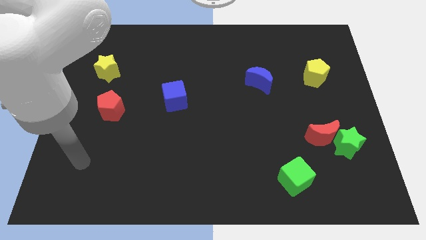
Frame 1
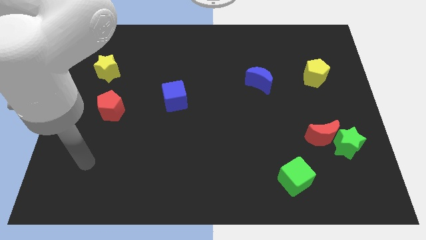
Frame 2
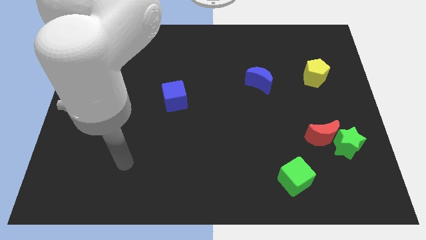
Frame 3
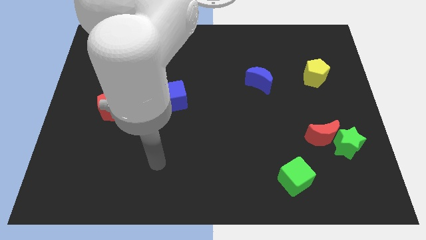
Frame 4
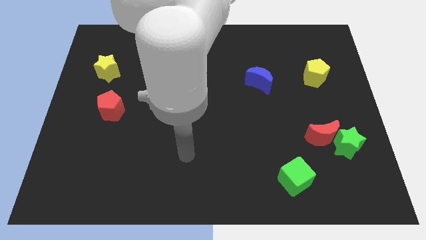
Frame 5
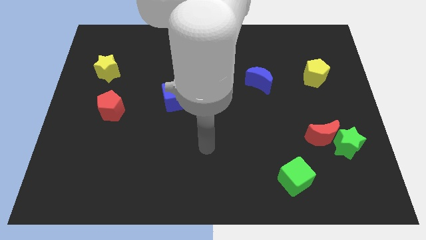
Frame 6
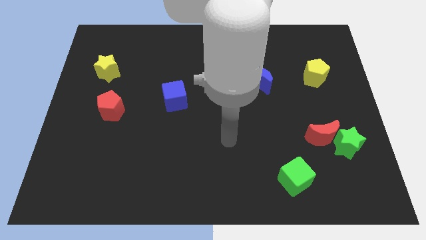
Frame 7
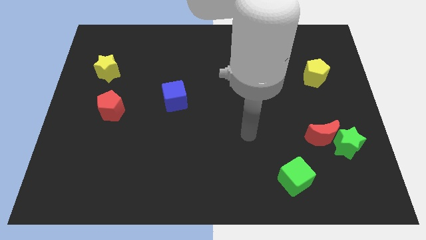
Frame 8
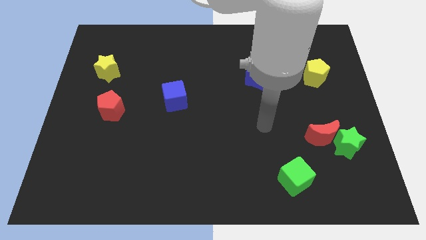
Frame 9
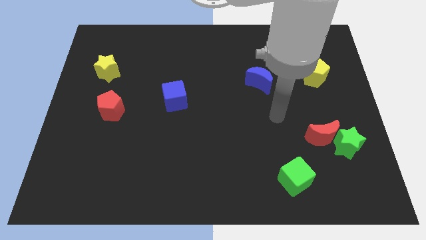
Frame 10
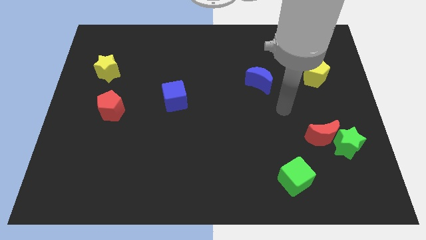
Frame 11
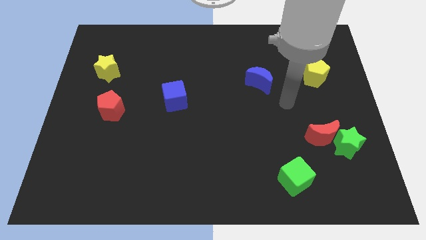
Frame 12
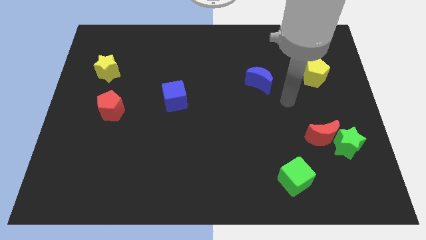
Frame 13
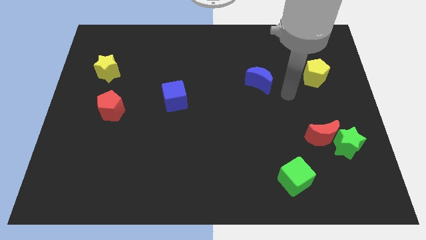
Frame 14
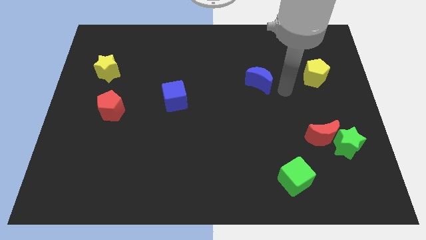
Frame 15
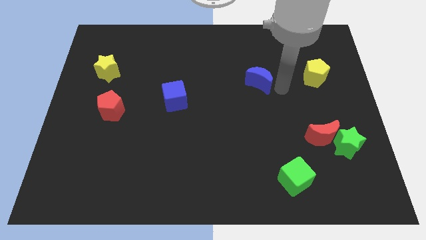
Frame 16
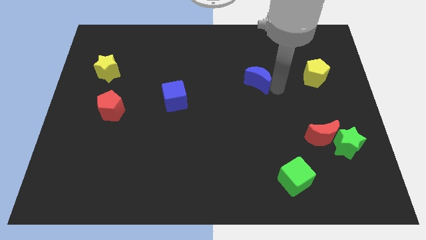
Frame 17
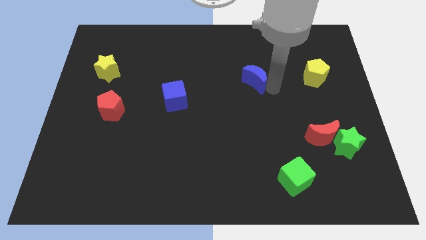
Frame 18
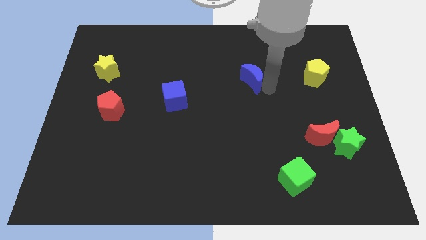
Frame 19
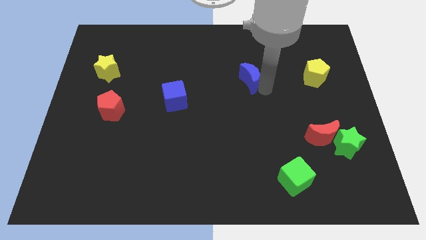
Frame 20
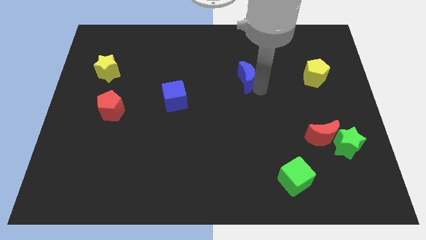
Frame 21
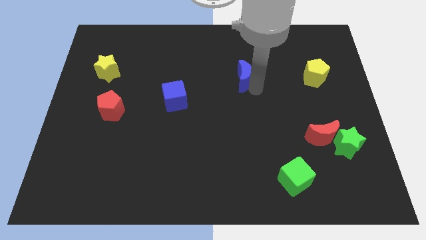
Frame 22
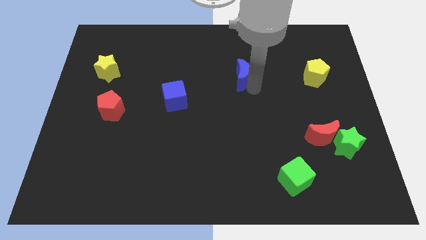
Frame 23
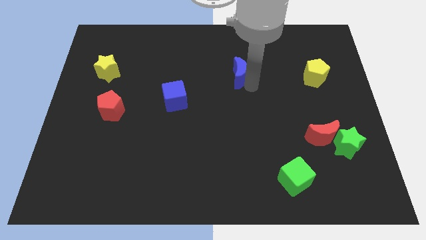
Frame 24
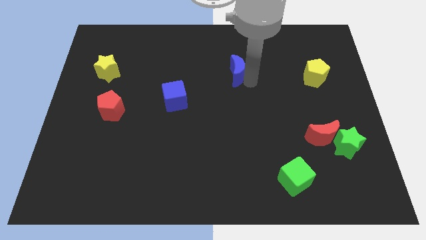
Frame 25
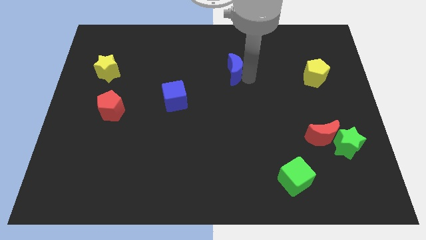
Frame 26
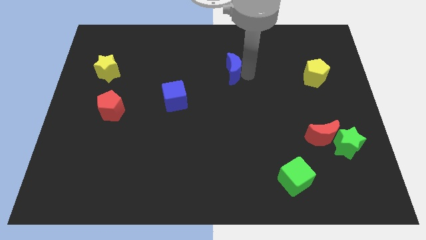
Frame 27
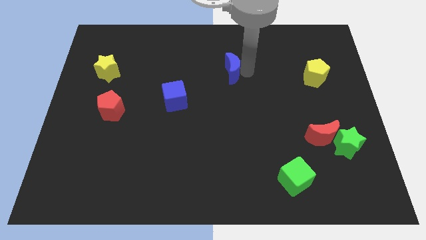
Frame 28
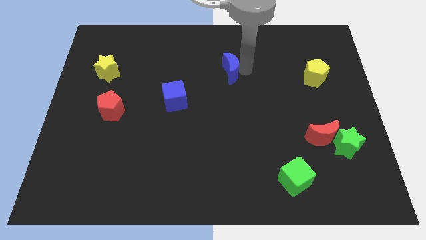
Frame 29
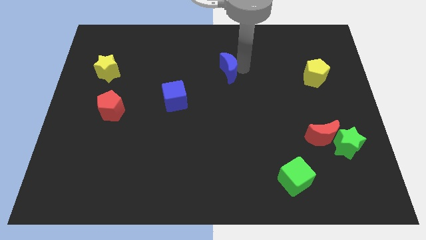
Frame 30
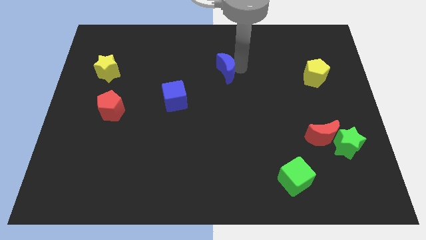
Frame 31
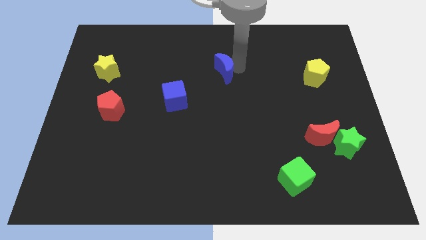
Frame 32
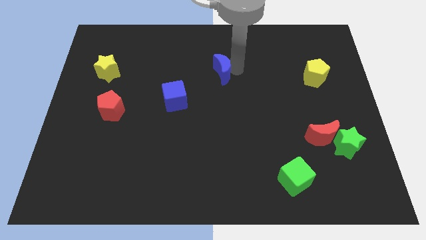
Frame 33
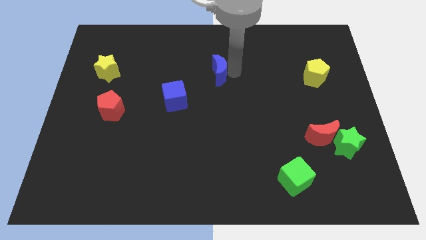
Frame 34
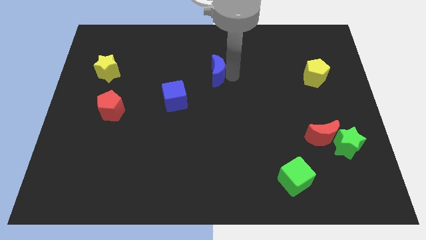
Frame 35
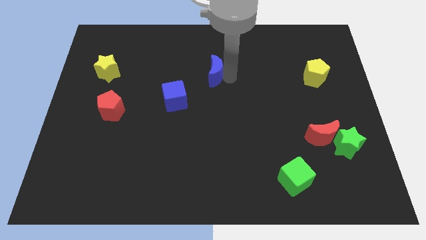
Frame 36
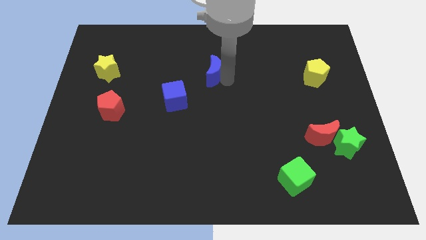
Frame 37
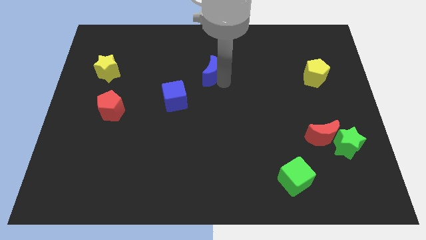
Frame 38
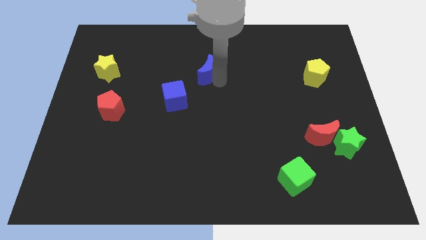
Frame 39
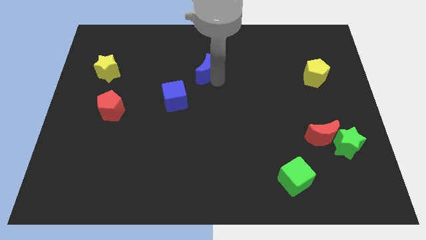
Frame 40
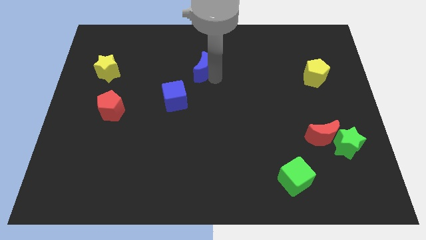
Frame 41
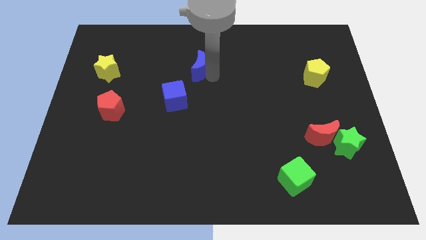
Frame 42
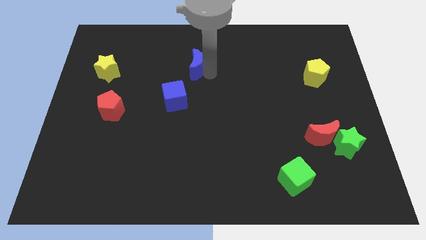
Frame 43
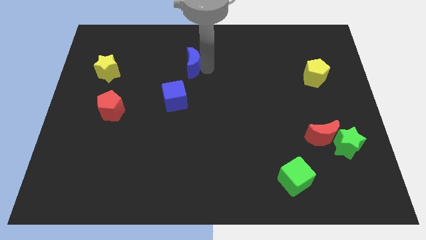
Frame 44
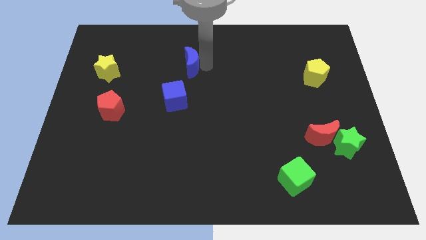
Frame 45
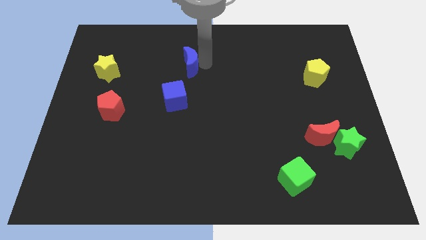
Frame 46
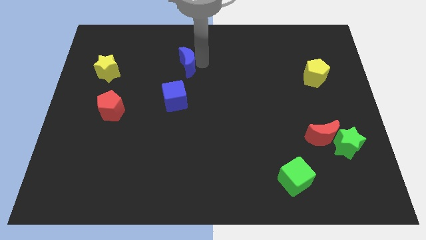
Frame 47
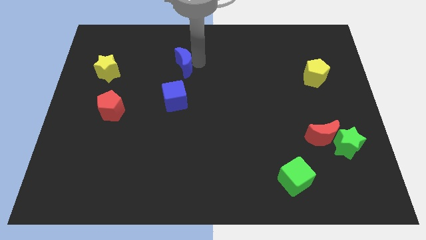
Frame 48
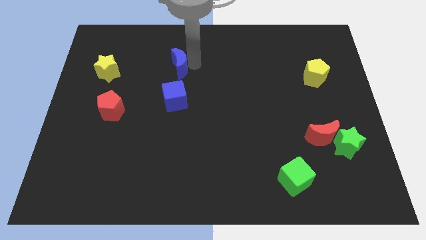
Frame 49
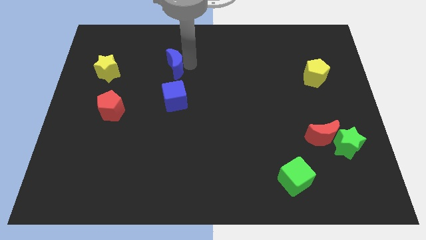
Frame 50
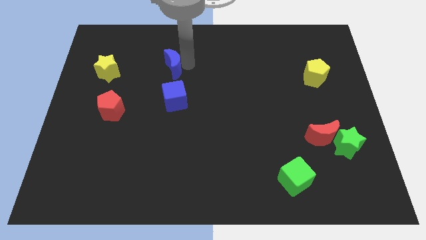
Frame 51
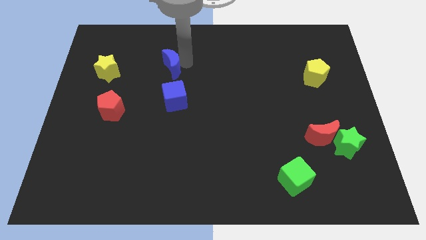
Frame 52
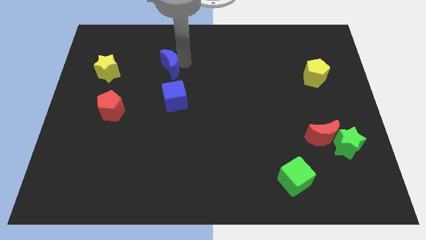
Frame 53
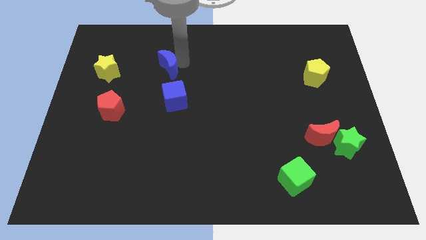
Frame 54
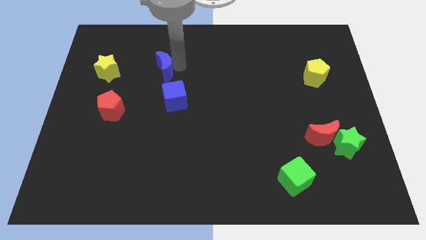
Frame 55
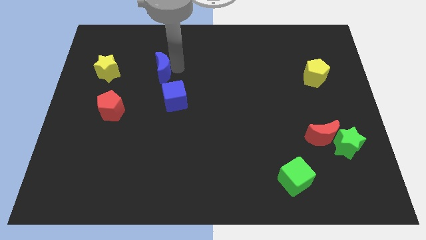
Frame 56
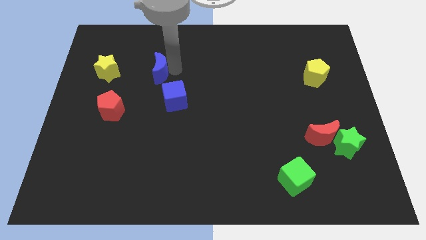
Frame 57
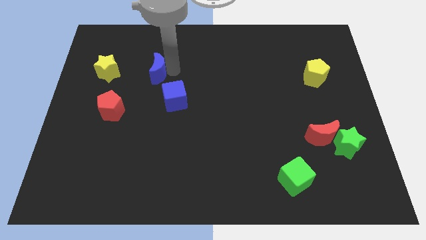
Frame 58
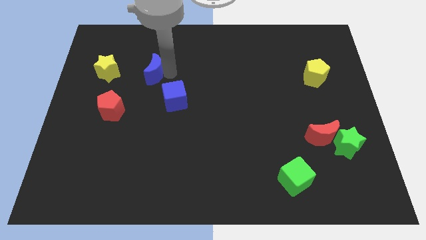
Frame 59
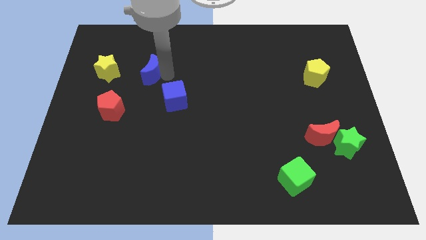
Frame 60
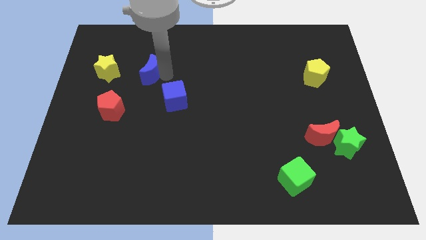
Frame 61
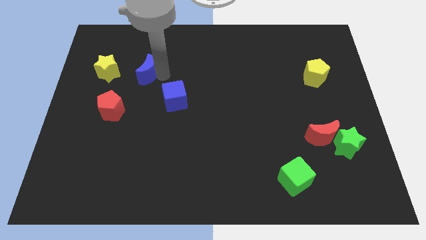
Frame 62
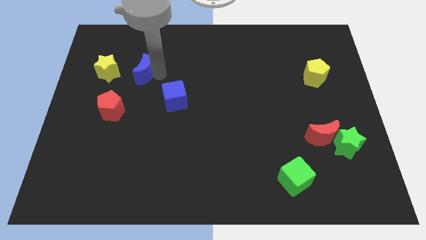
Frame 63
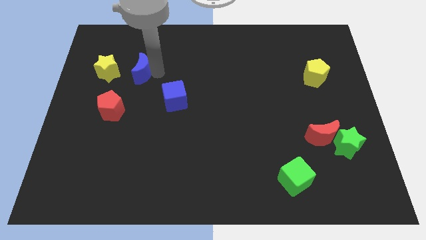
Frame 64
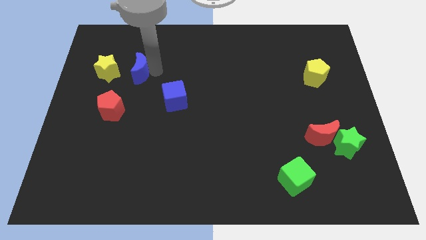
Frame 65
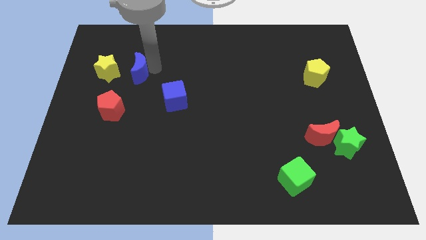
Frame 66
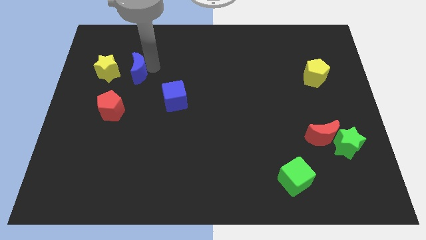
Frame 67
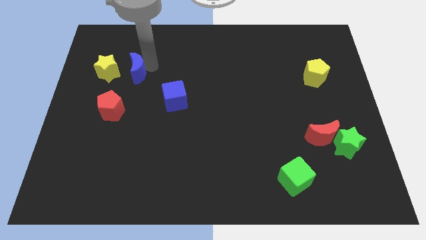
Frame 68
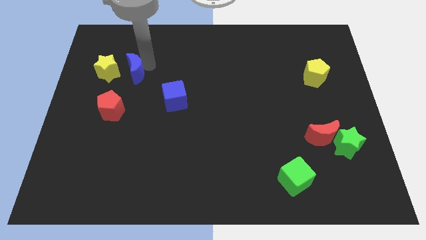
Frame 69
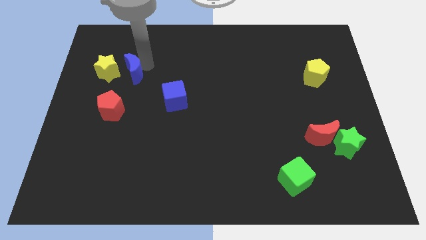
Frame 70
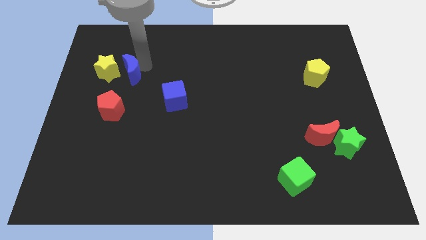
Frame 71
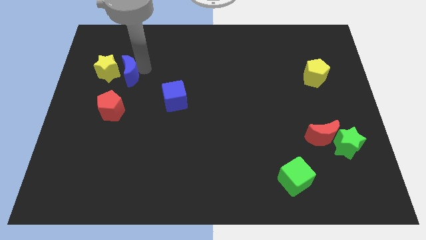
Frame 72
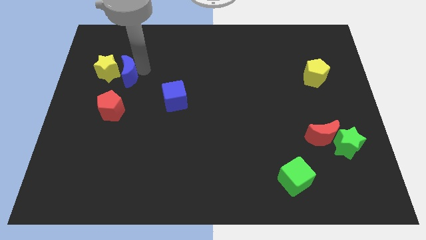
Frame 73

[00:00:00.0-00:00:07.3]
move the blue moon towards the yellow star

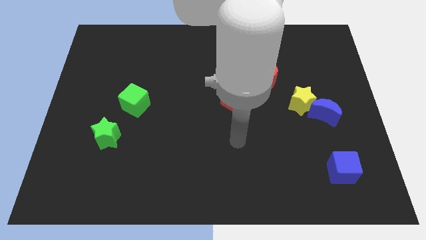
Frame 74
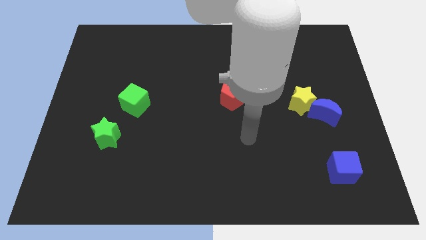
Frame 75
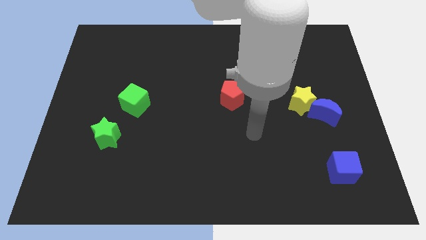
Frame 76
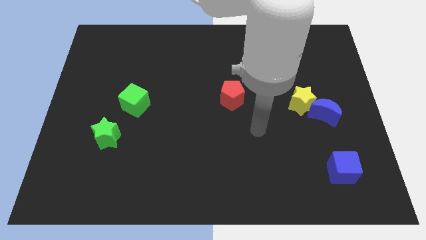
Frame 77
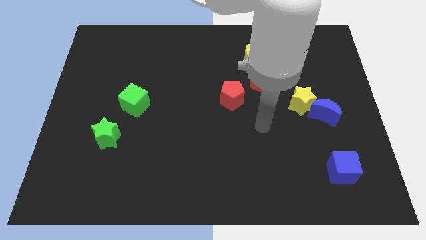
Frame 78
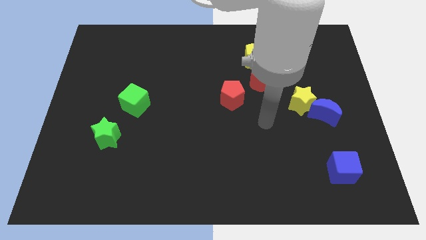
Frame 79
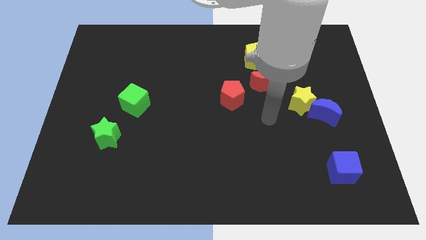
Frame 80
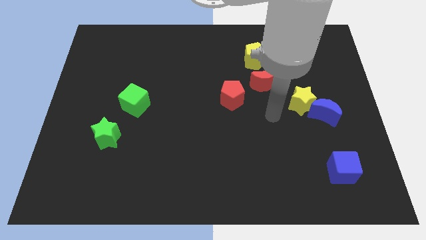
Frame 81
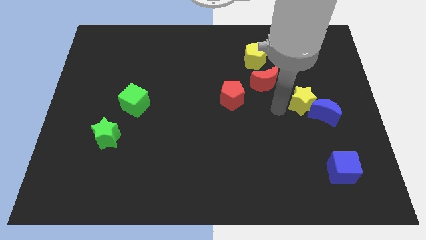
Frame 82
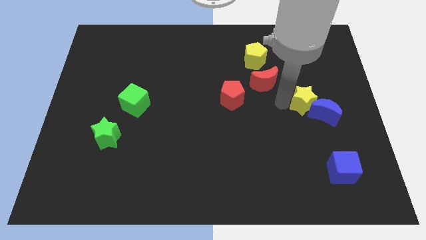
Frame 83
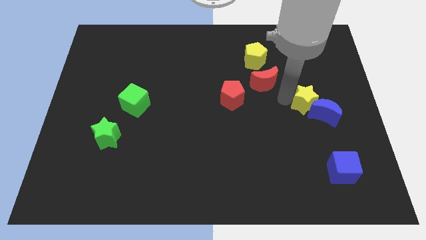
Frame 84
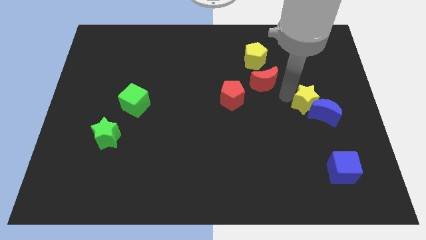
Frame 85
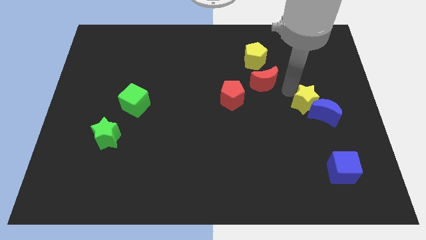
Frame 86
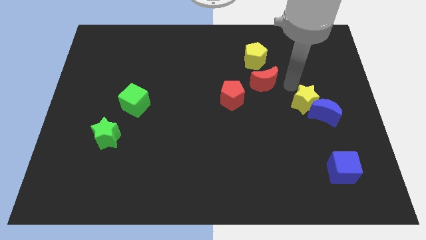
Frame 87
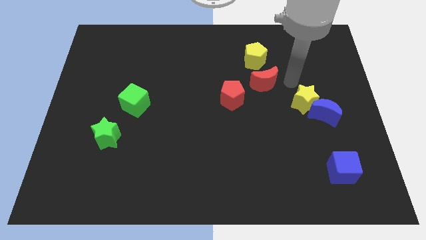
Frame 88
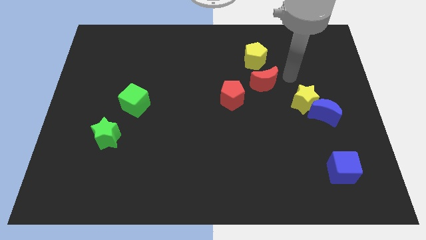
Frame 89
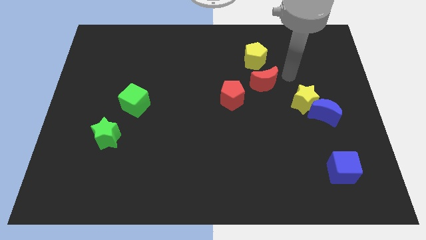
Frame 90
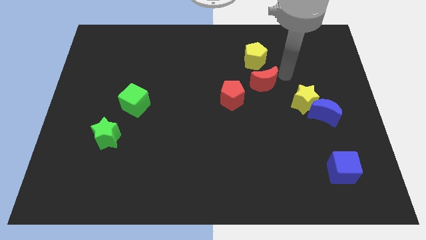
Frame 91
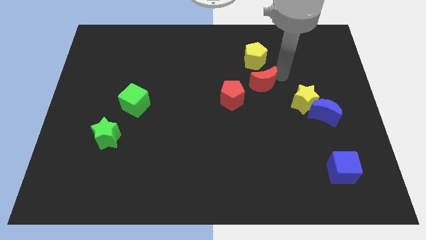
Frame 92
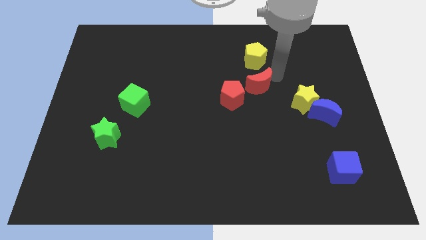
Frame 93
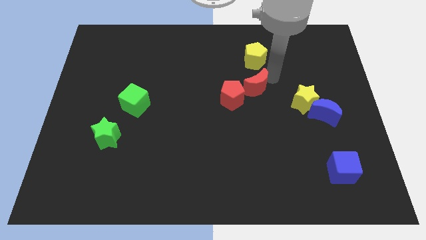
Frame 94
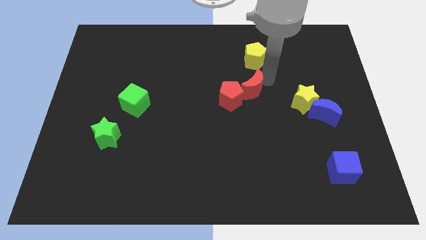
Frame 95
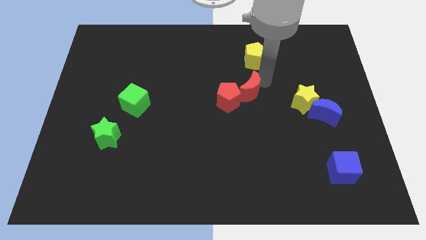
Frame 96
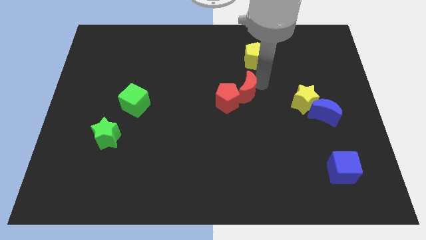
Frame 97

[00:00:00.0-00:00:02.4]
push the red moon next to the red pentagon
